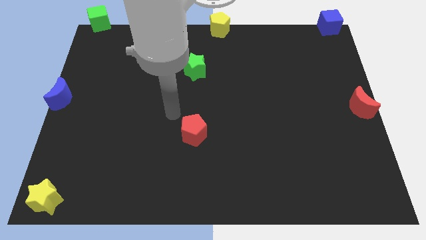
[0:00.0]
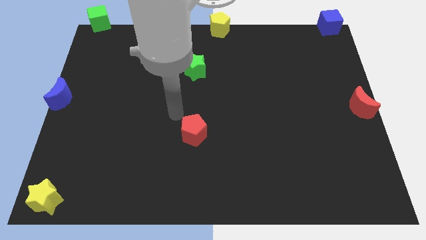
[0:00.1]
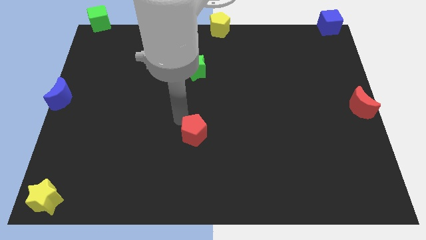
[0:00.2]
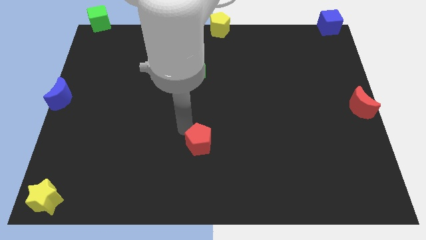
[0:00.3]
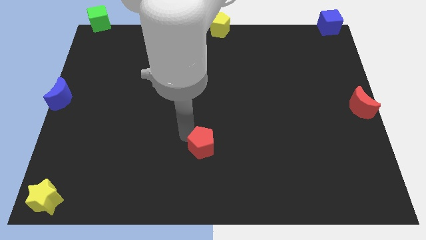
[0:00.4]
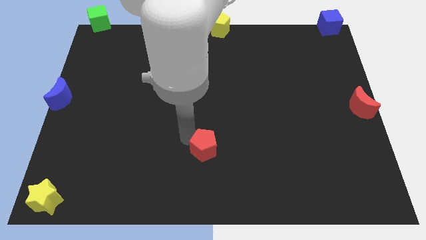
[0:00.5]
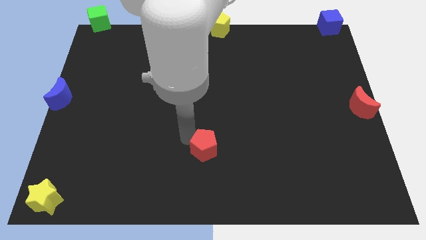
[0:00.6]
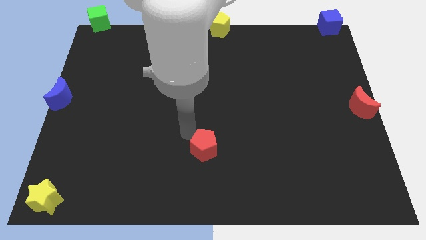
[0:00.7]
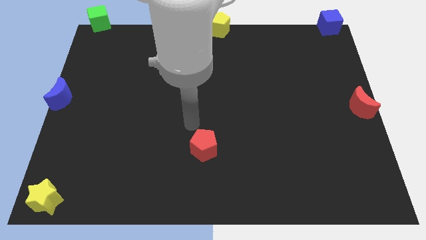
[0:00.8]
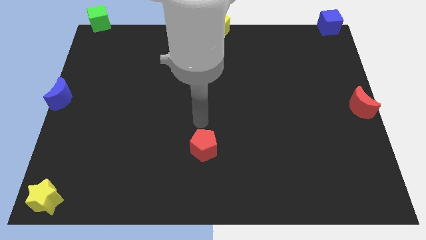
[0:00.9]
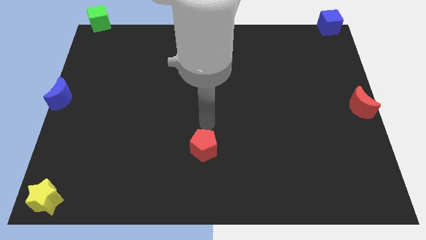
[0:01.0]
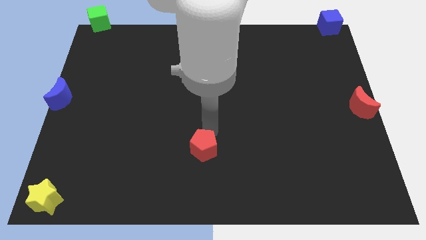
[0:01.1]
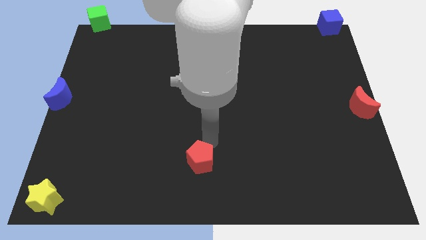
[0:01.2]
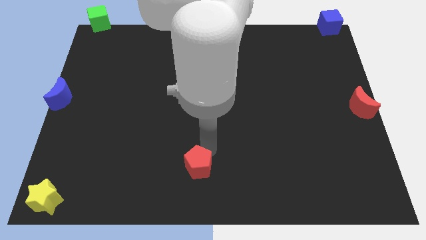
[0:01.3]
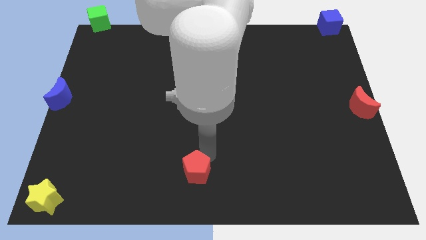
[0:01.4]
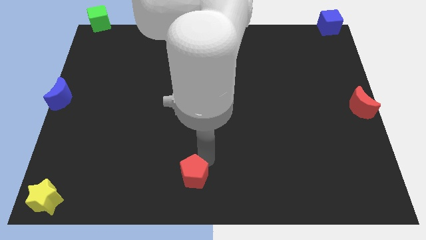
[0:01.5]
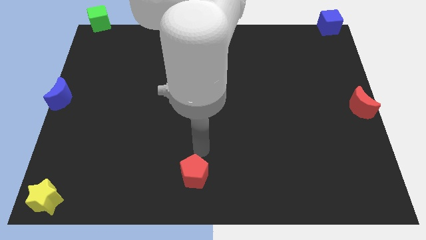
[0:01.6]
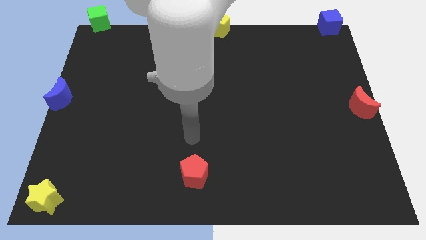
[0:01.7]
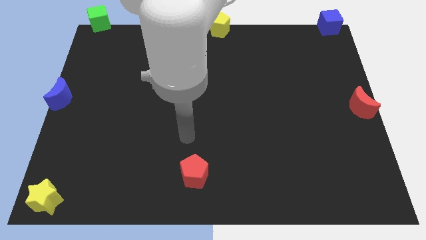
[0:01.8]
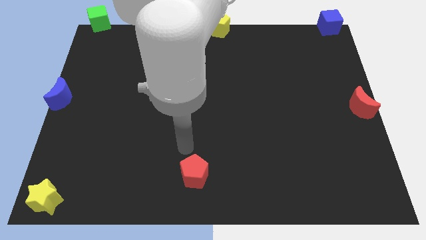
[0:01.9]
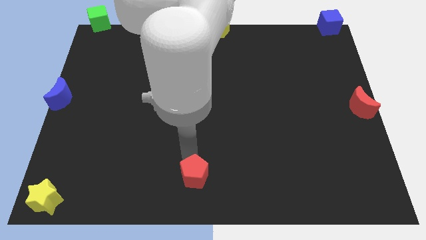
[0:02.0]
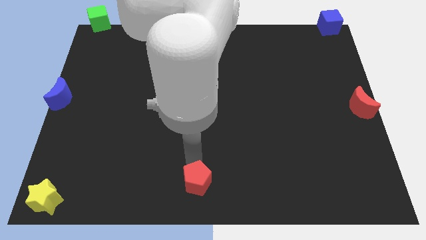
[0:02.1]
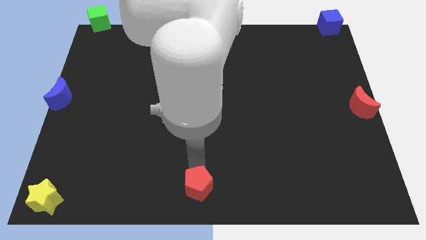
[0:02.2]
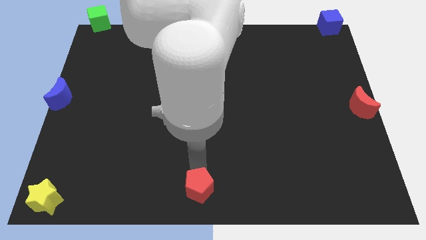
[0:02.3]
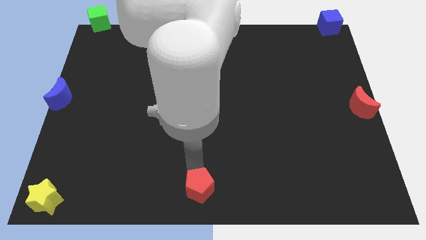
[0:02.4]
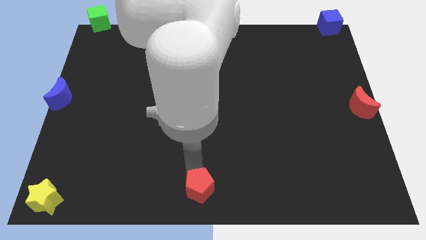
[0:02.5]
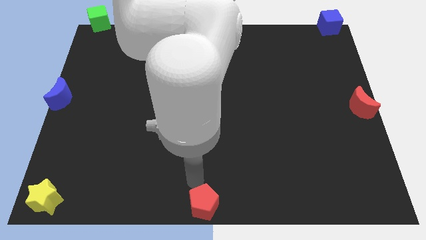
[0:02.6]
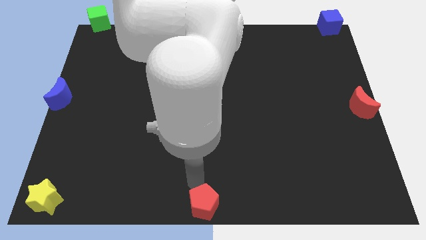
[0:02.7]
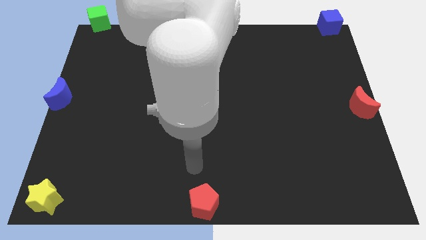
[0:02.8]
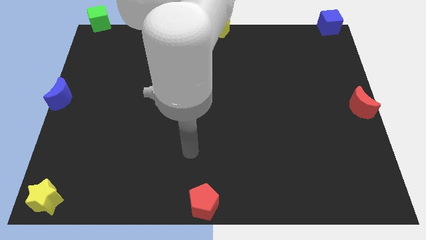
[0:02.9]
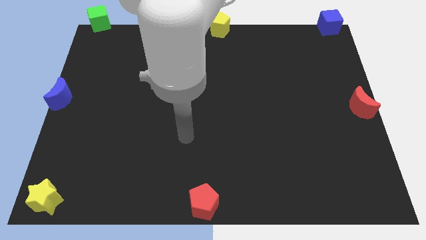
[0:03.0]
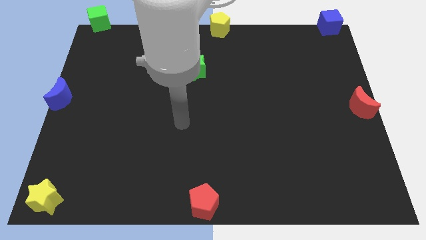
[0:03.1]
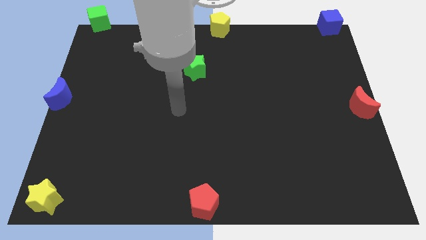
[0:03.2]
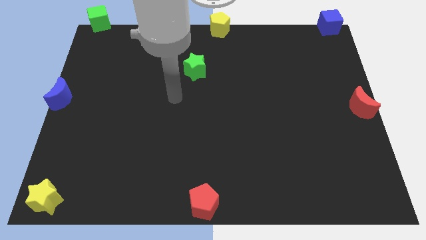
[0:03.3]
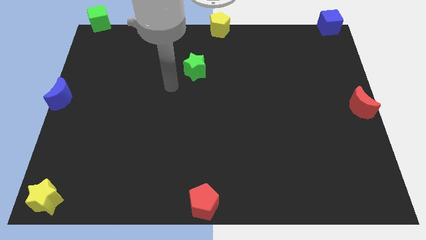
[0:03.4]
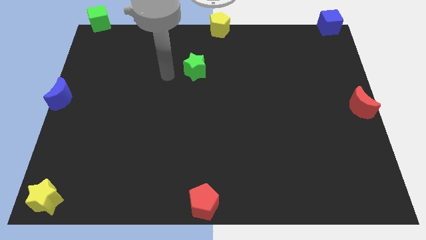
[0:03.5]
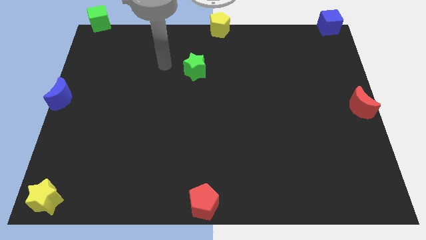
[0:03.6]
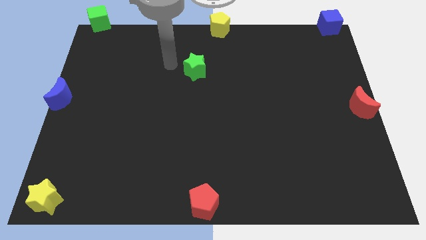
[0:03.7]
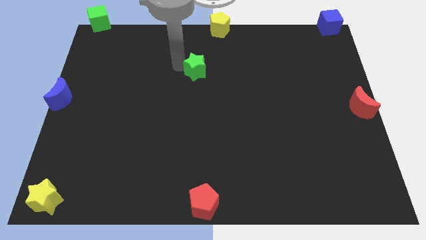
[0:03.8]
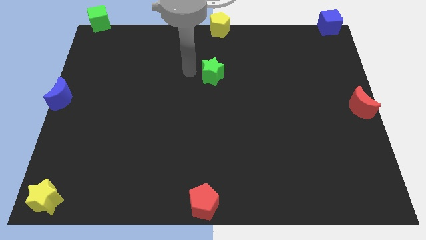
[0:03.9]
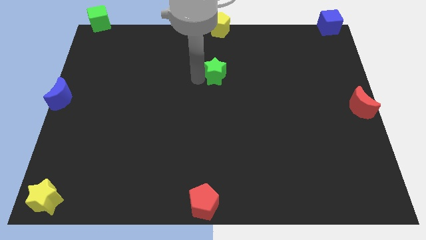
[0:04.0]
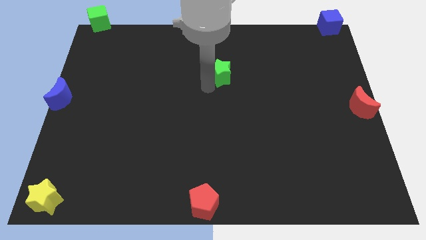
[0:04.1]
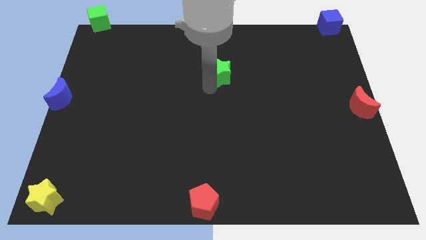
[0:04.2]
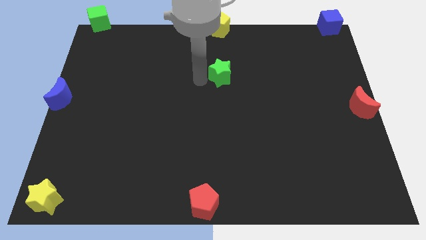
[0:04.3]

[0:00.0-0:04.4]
drag the red pentagon to the bottom of the center

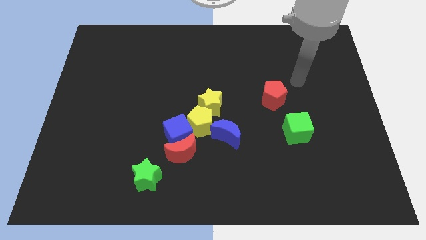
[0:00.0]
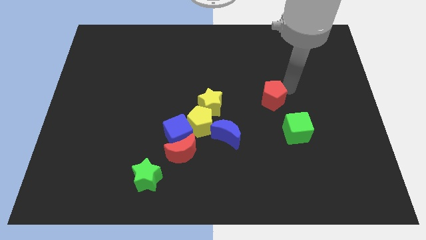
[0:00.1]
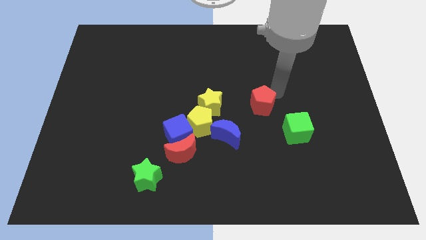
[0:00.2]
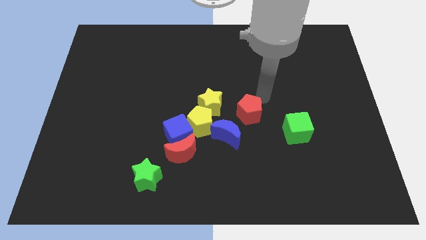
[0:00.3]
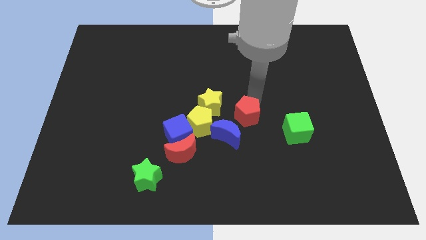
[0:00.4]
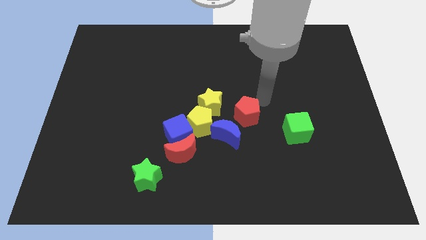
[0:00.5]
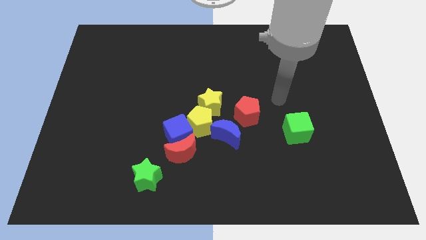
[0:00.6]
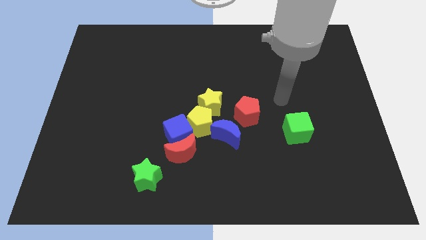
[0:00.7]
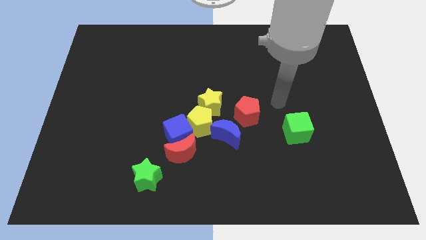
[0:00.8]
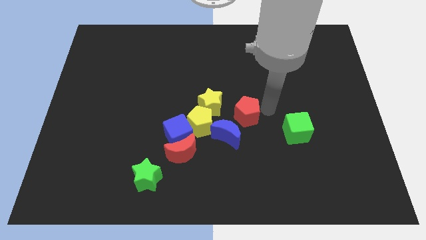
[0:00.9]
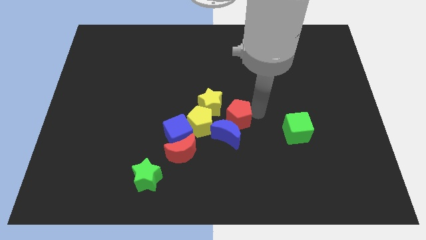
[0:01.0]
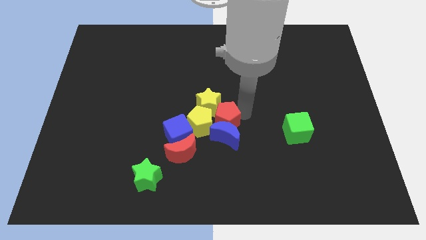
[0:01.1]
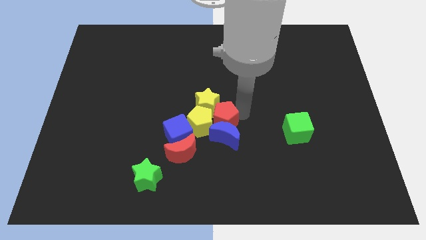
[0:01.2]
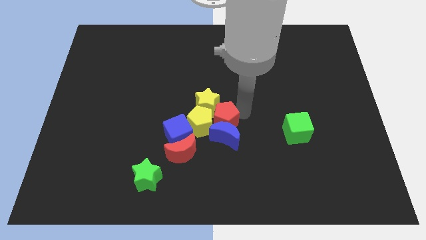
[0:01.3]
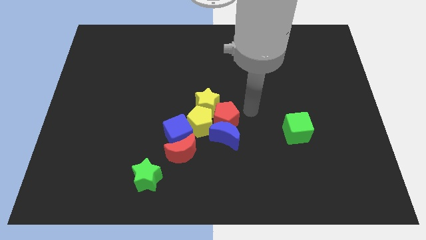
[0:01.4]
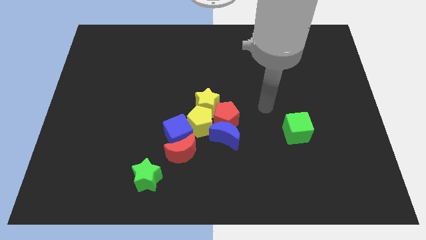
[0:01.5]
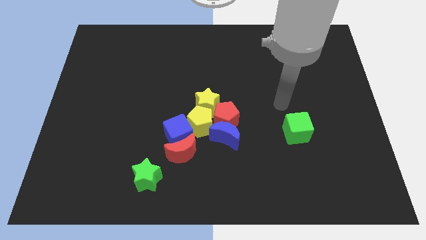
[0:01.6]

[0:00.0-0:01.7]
move red pentagon to the center of the board

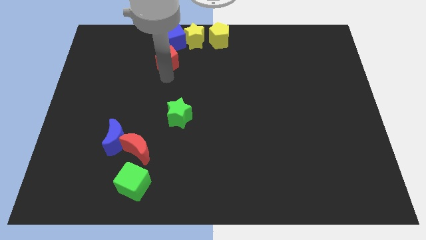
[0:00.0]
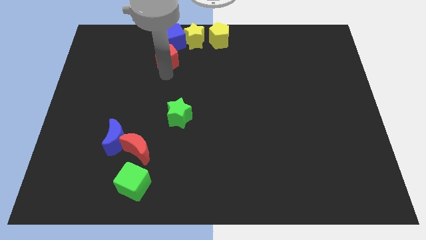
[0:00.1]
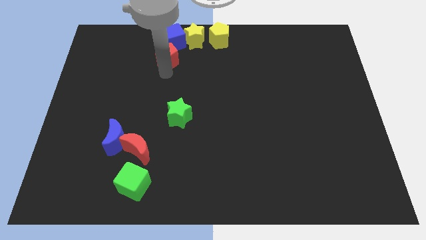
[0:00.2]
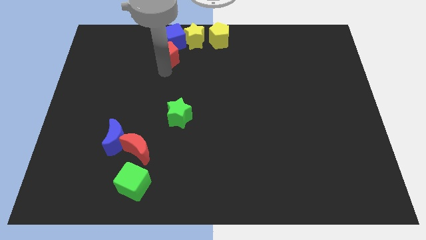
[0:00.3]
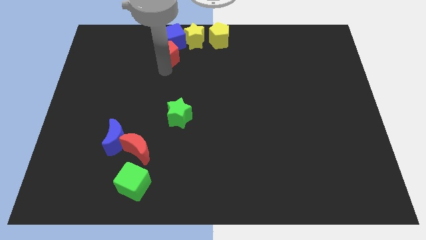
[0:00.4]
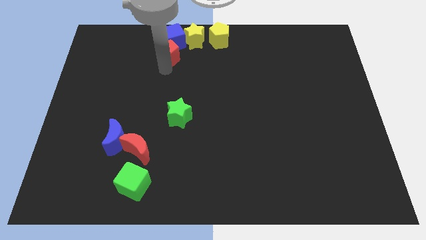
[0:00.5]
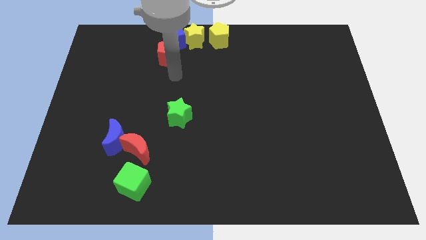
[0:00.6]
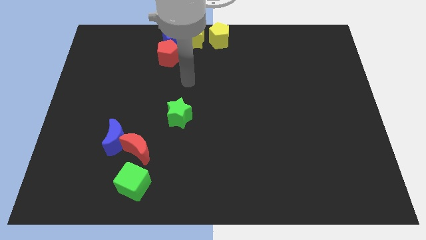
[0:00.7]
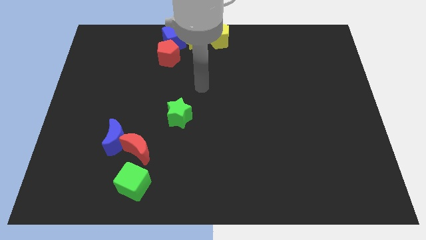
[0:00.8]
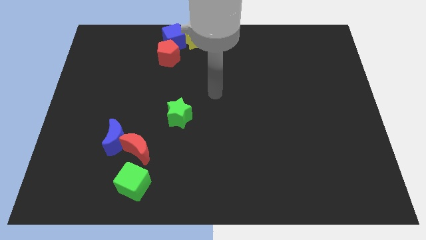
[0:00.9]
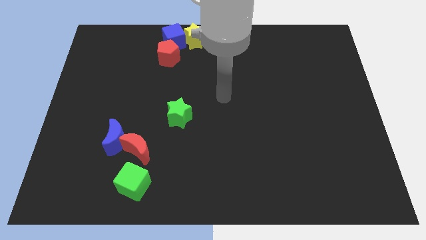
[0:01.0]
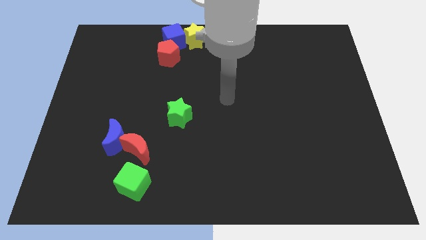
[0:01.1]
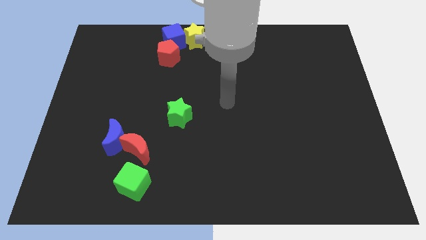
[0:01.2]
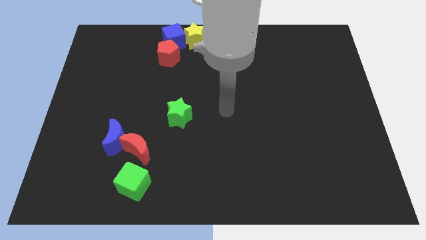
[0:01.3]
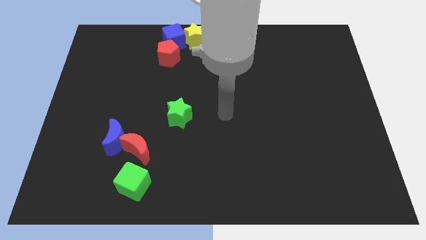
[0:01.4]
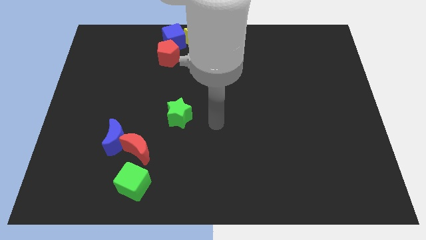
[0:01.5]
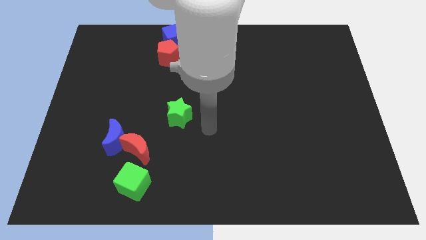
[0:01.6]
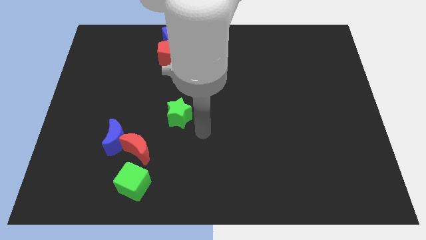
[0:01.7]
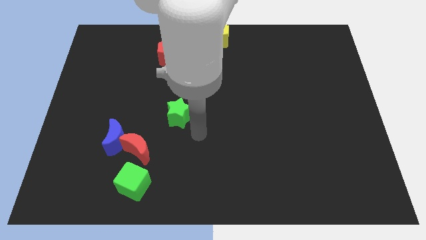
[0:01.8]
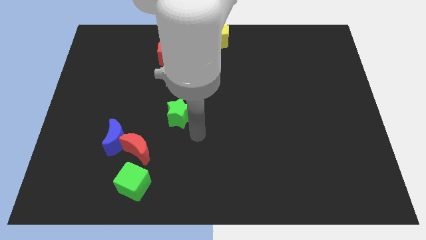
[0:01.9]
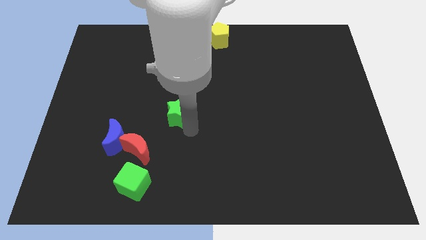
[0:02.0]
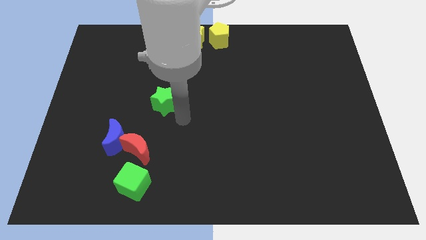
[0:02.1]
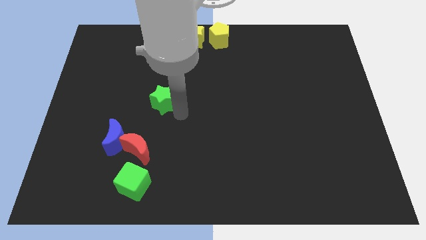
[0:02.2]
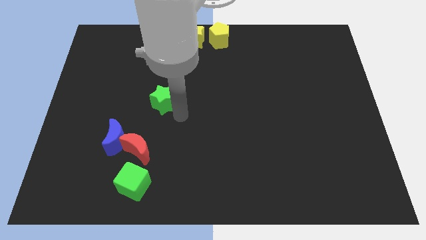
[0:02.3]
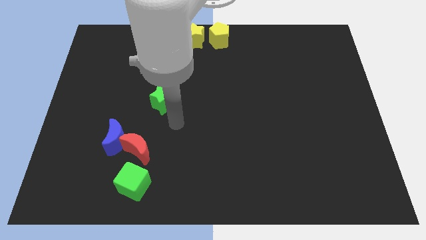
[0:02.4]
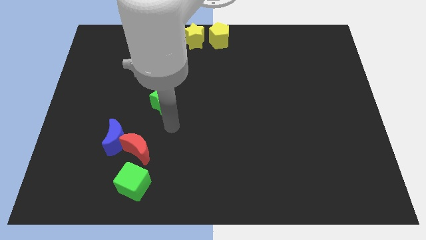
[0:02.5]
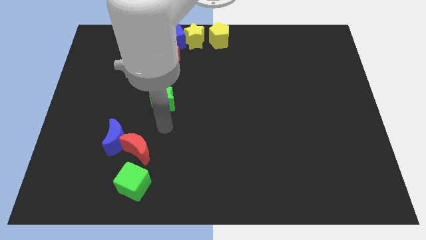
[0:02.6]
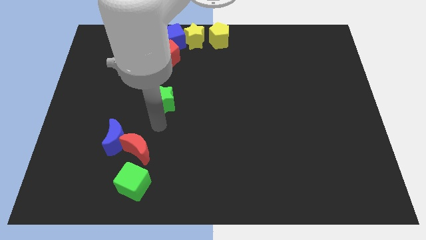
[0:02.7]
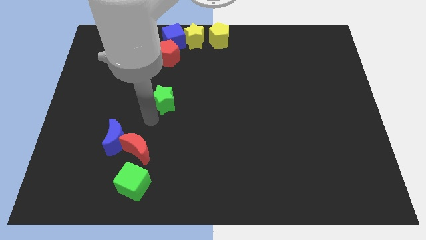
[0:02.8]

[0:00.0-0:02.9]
place the green star slightly up
